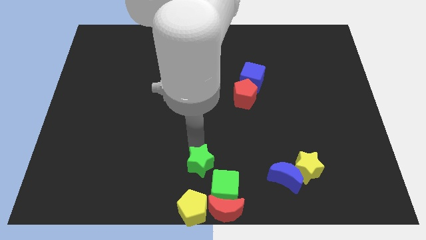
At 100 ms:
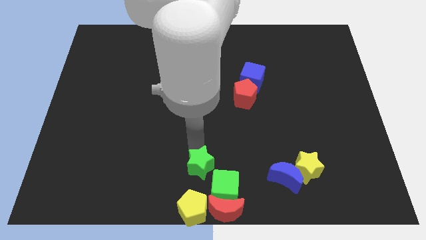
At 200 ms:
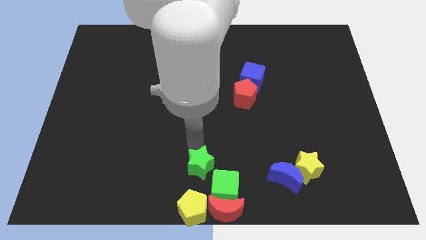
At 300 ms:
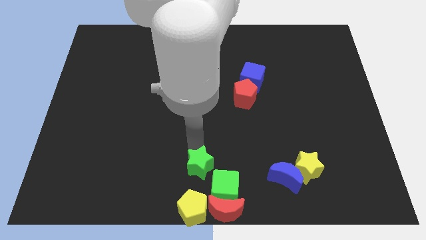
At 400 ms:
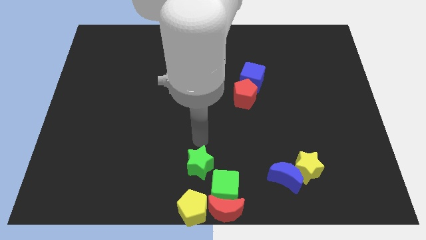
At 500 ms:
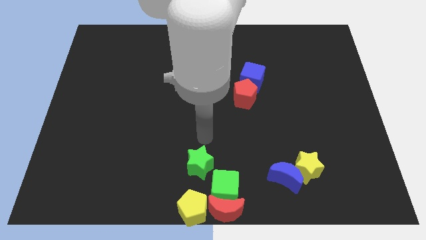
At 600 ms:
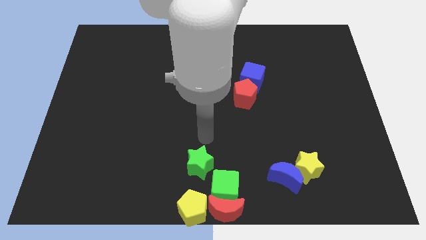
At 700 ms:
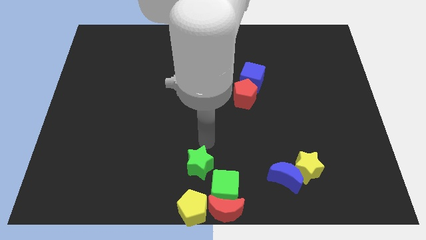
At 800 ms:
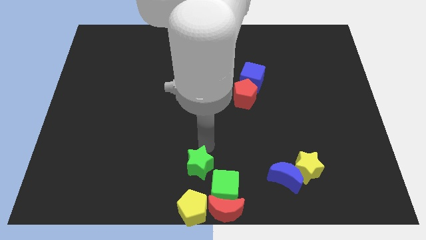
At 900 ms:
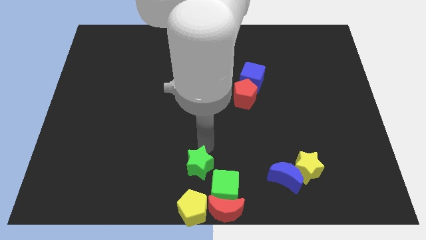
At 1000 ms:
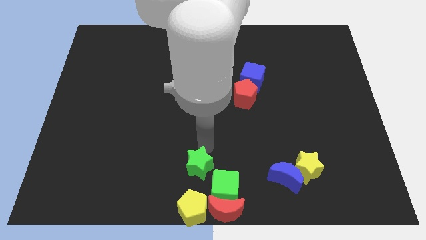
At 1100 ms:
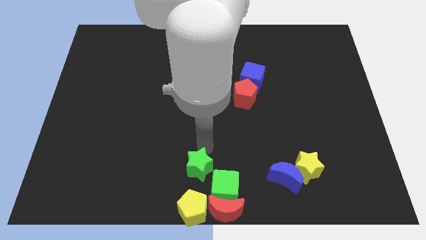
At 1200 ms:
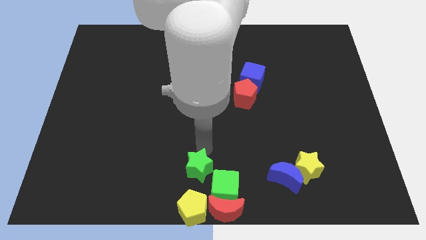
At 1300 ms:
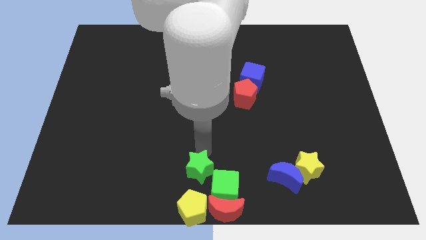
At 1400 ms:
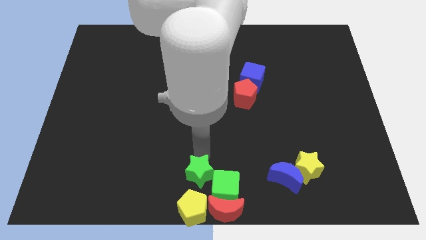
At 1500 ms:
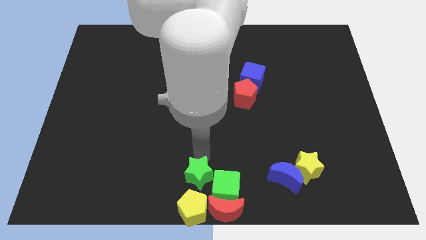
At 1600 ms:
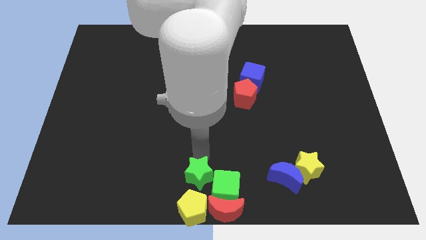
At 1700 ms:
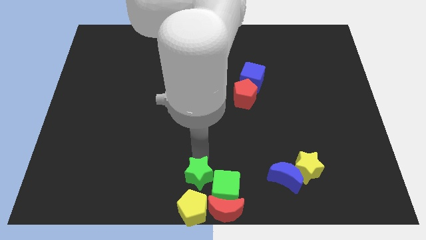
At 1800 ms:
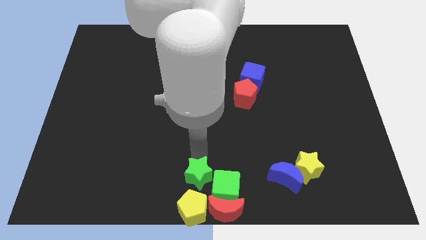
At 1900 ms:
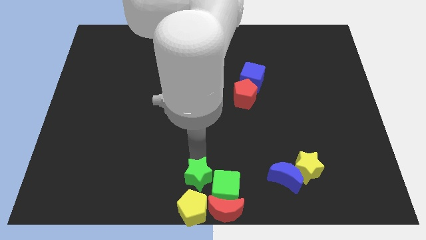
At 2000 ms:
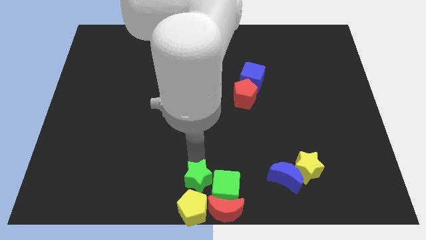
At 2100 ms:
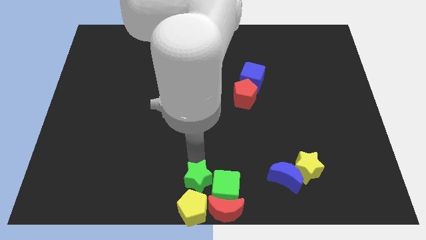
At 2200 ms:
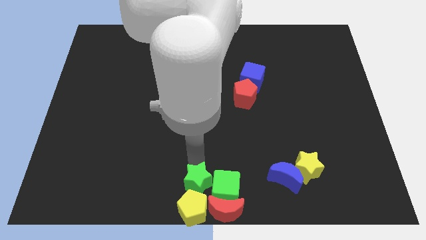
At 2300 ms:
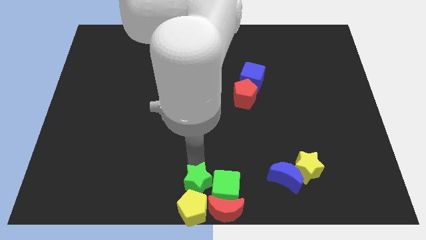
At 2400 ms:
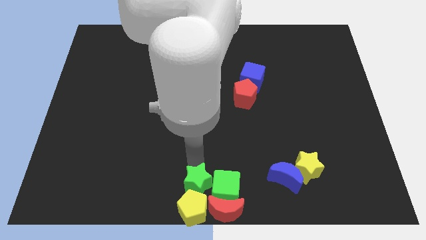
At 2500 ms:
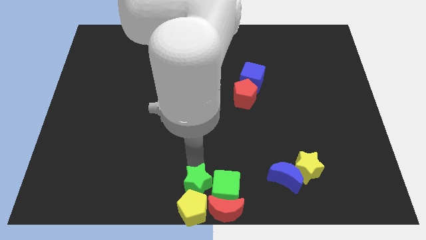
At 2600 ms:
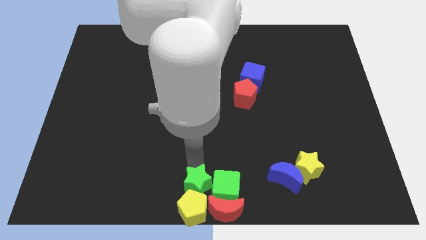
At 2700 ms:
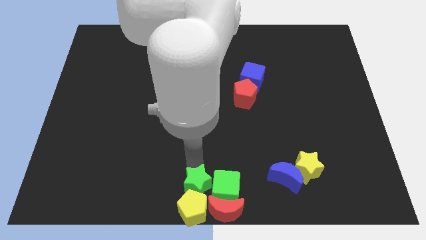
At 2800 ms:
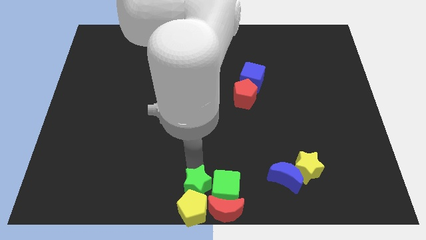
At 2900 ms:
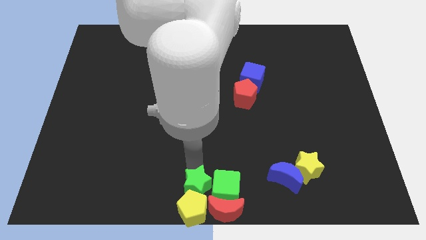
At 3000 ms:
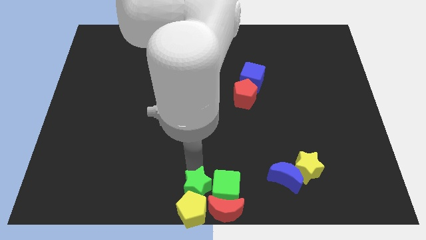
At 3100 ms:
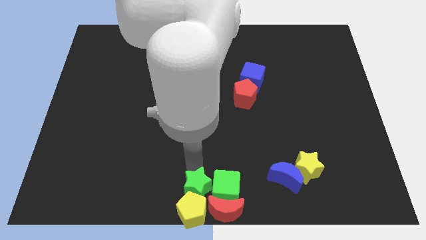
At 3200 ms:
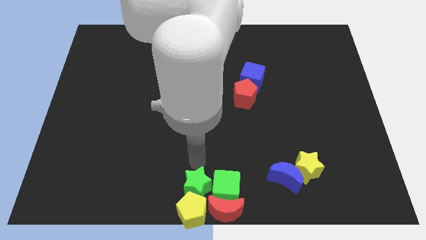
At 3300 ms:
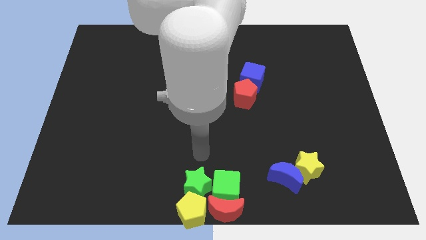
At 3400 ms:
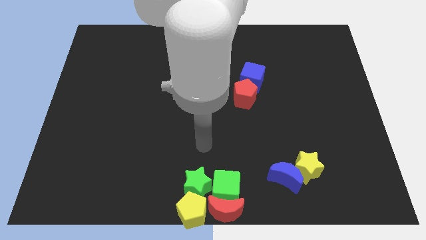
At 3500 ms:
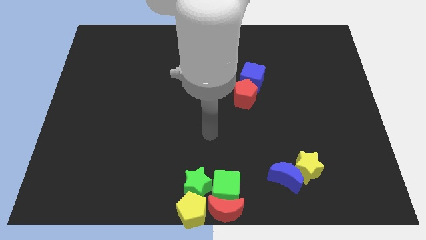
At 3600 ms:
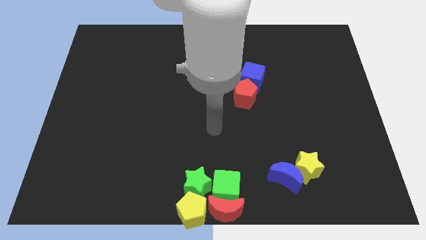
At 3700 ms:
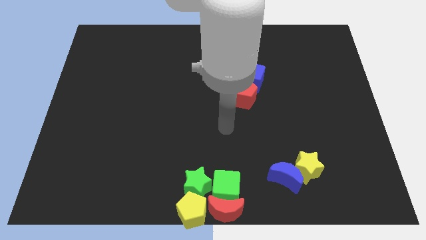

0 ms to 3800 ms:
push the green star into the yellow pentagon

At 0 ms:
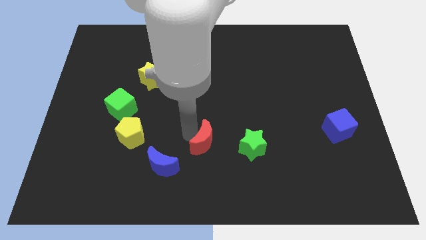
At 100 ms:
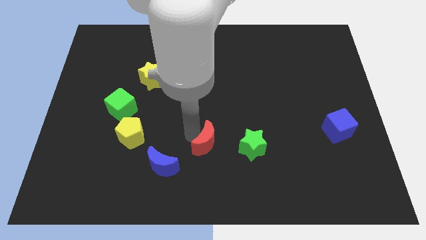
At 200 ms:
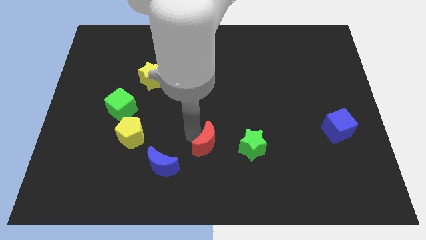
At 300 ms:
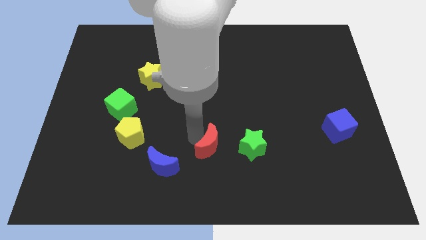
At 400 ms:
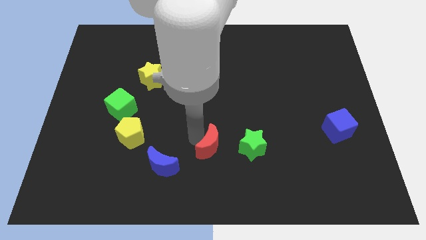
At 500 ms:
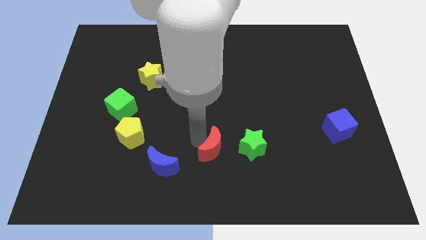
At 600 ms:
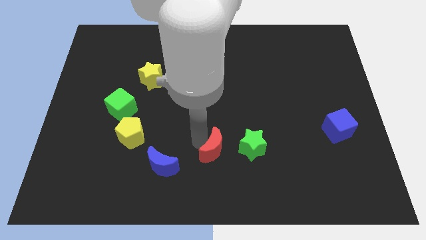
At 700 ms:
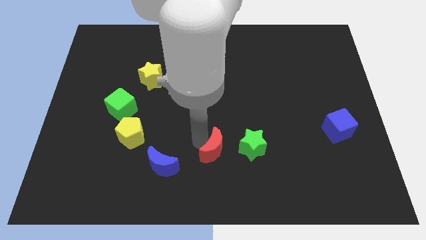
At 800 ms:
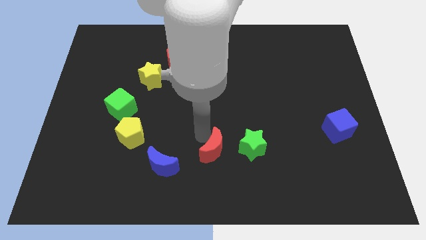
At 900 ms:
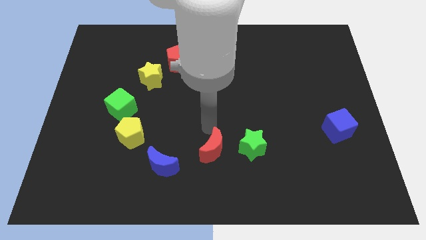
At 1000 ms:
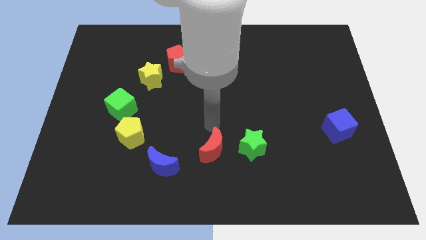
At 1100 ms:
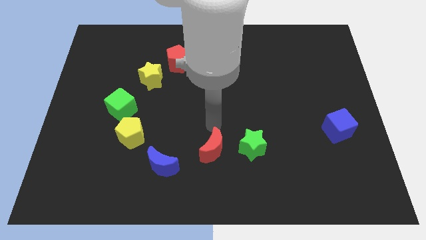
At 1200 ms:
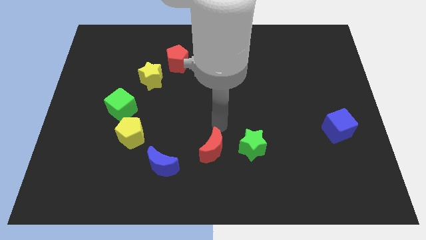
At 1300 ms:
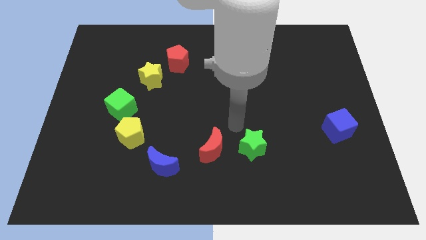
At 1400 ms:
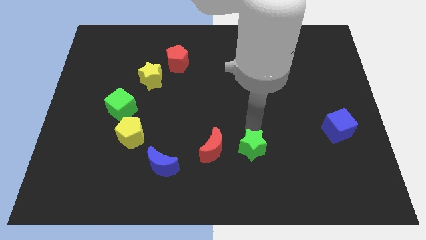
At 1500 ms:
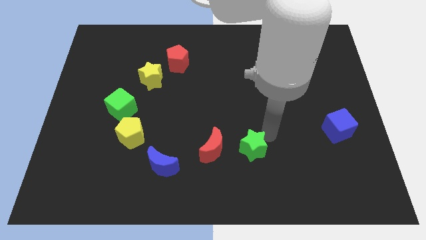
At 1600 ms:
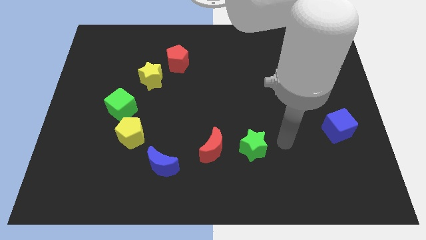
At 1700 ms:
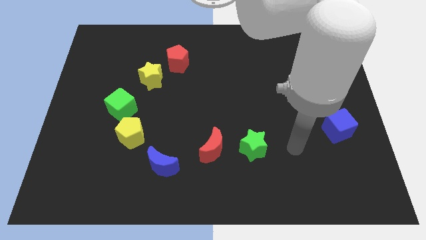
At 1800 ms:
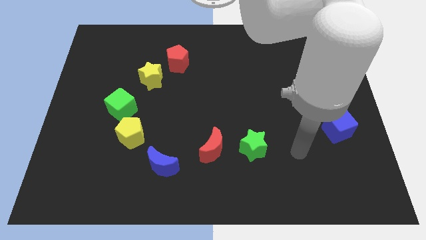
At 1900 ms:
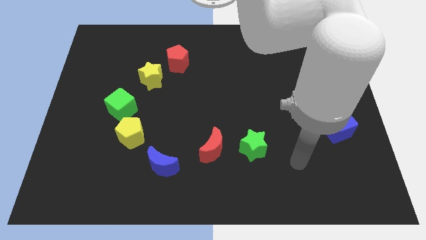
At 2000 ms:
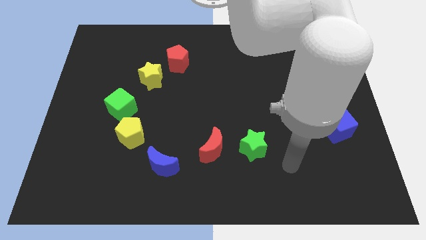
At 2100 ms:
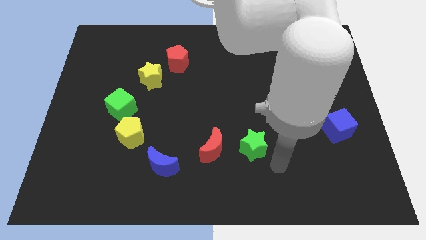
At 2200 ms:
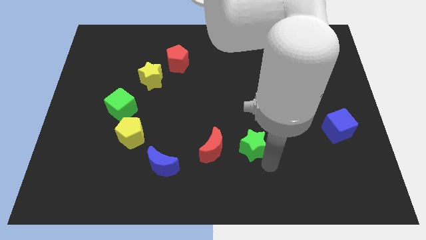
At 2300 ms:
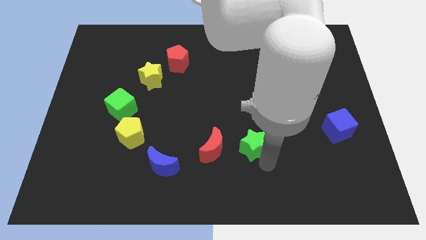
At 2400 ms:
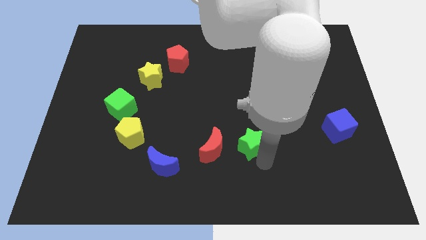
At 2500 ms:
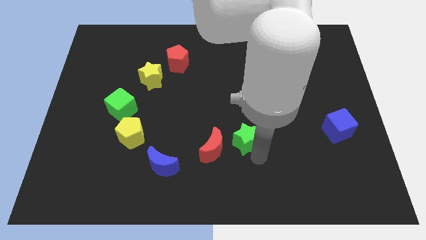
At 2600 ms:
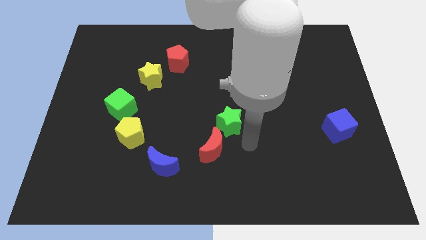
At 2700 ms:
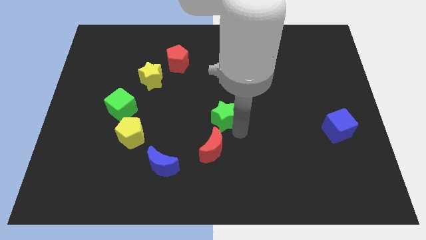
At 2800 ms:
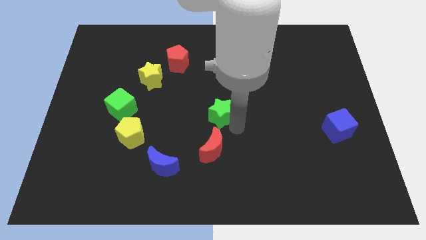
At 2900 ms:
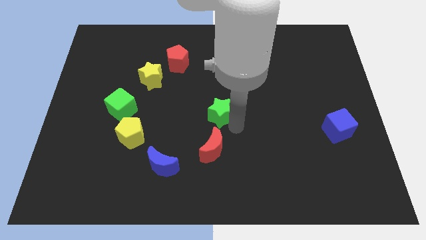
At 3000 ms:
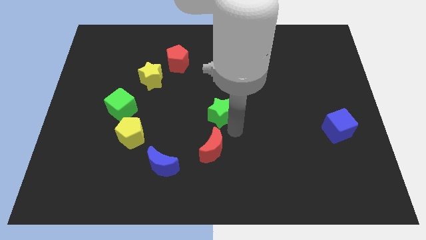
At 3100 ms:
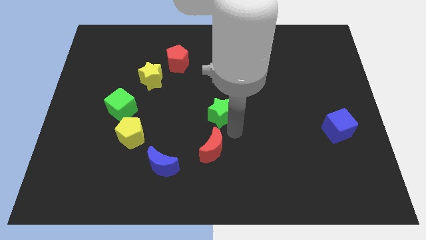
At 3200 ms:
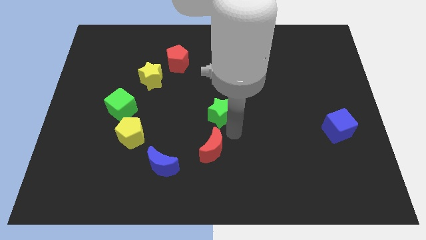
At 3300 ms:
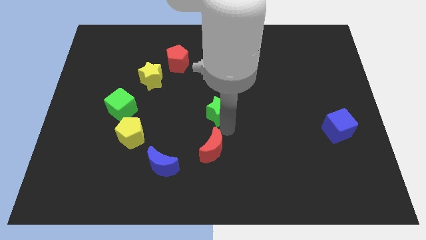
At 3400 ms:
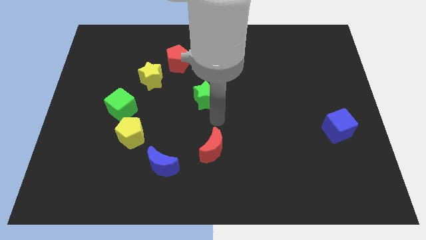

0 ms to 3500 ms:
push green star above red crescent

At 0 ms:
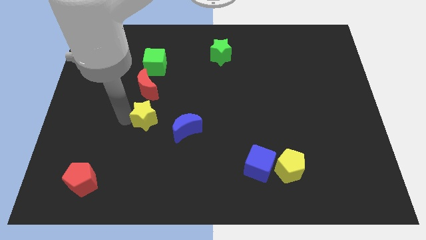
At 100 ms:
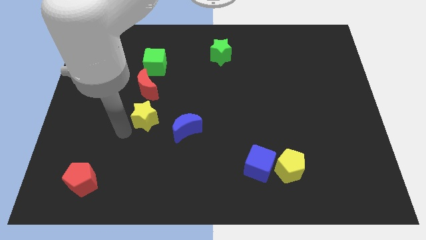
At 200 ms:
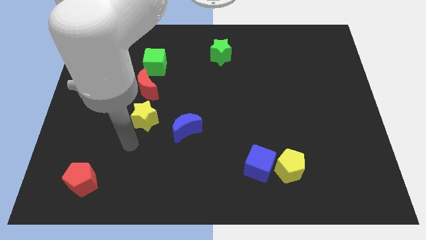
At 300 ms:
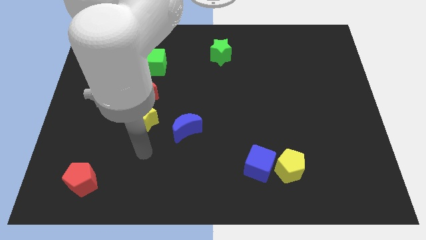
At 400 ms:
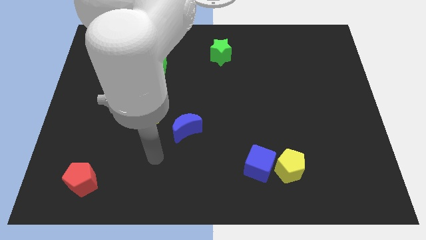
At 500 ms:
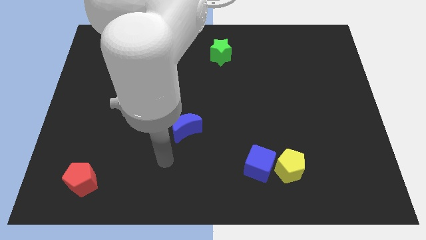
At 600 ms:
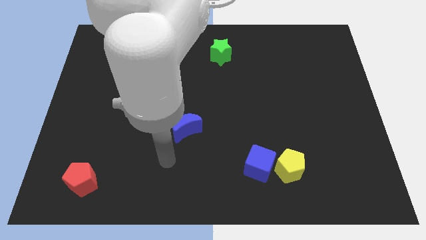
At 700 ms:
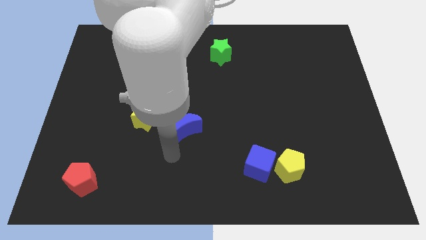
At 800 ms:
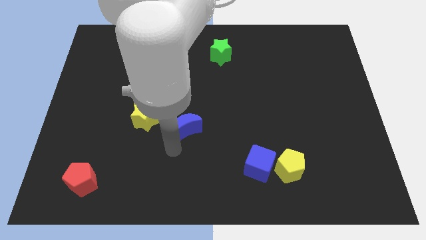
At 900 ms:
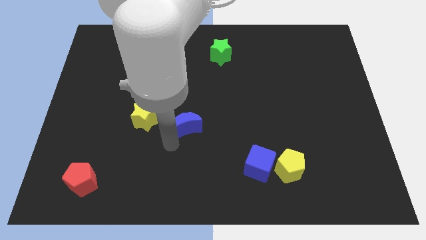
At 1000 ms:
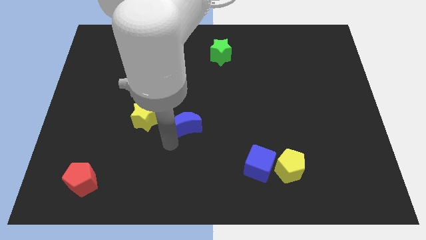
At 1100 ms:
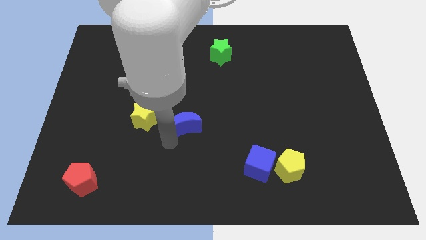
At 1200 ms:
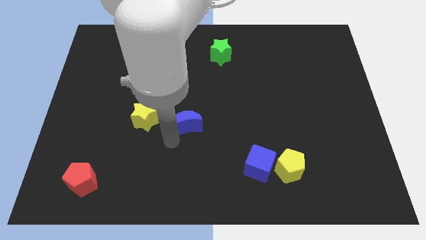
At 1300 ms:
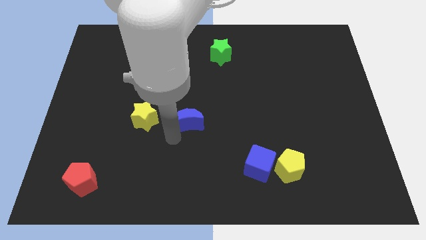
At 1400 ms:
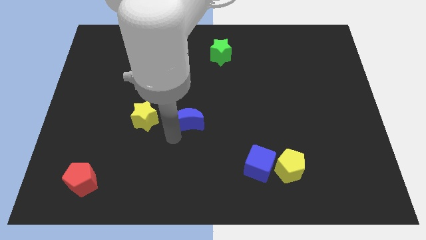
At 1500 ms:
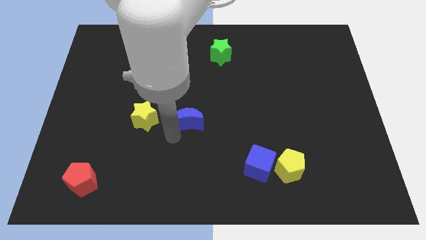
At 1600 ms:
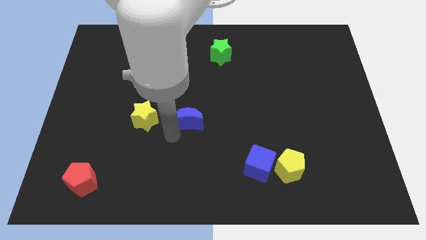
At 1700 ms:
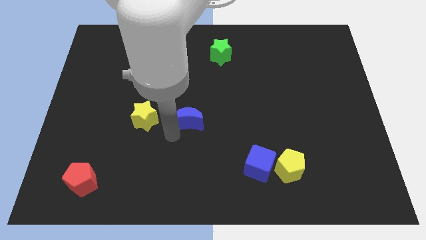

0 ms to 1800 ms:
place the blue moon right to the yellow star
